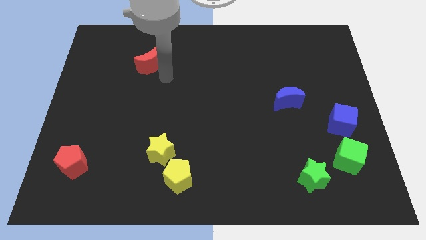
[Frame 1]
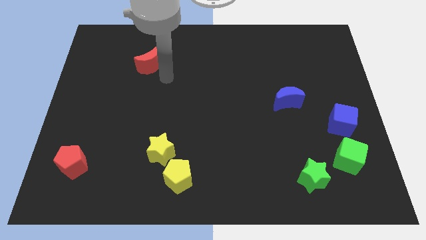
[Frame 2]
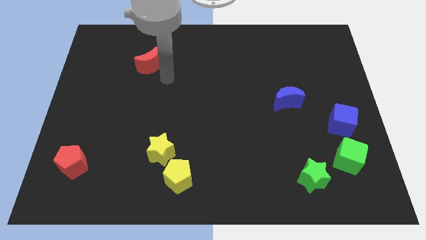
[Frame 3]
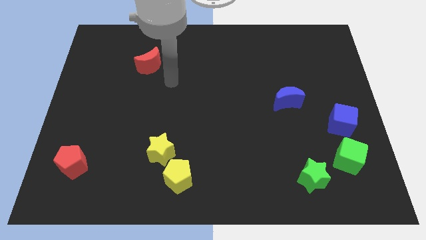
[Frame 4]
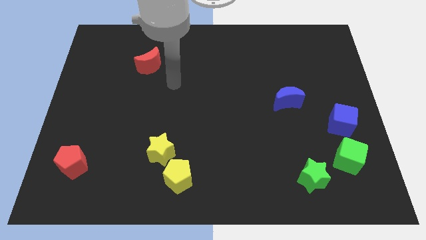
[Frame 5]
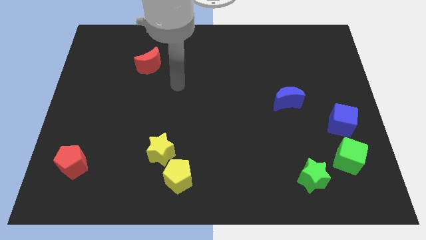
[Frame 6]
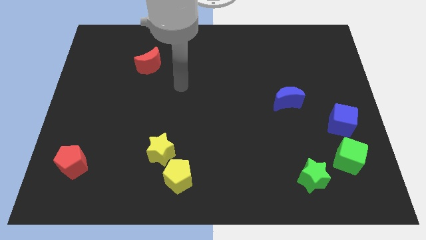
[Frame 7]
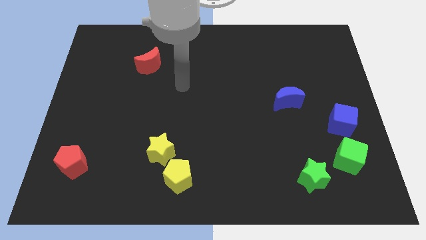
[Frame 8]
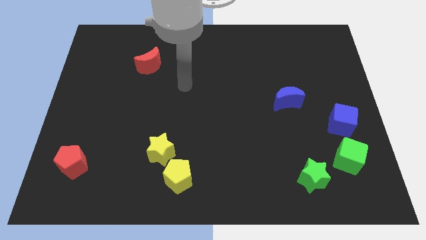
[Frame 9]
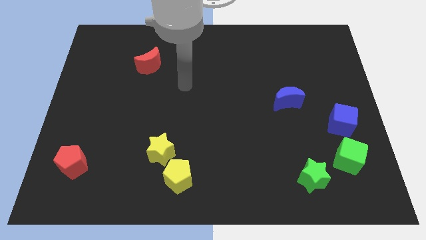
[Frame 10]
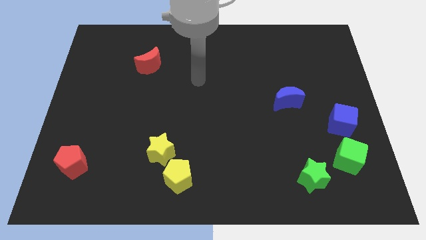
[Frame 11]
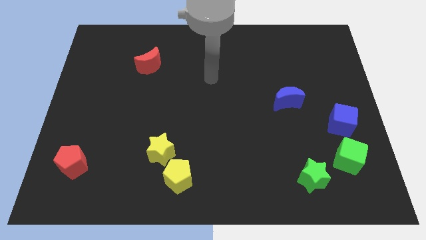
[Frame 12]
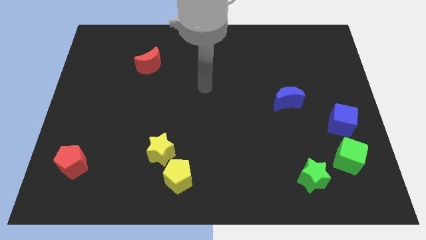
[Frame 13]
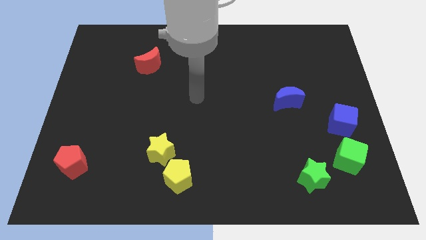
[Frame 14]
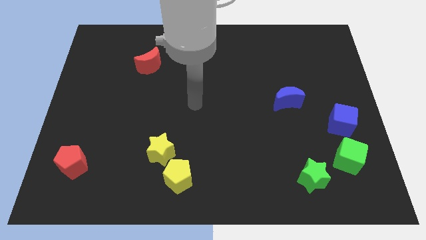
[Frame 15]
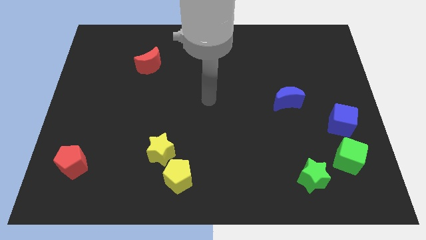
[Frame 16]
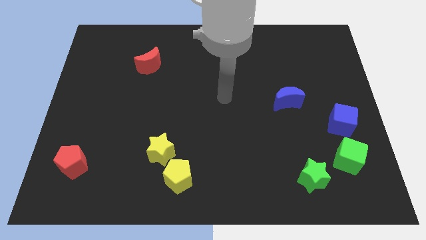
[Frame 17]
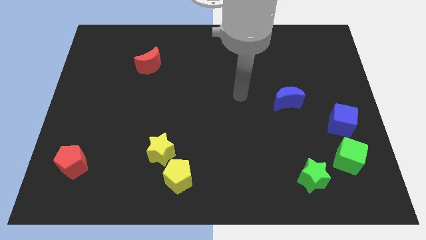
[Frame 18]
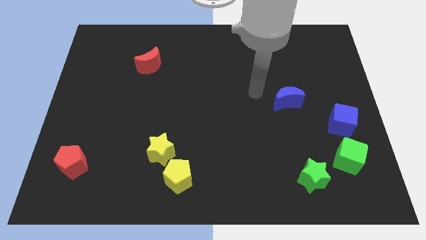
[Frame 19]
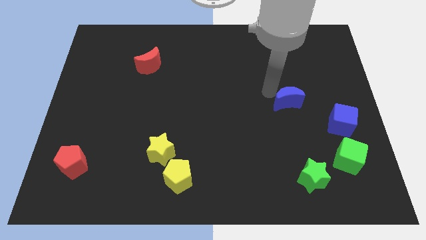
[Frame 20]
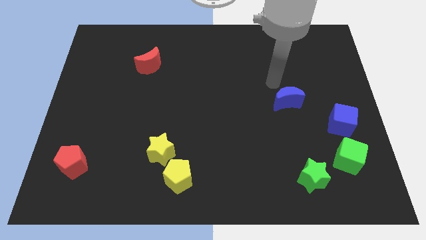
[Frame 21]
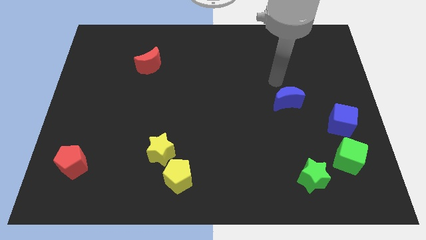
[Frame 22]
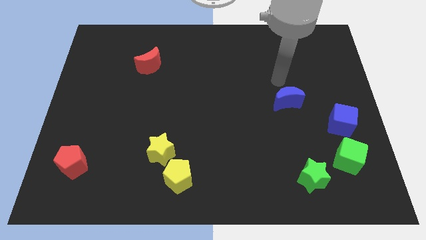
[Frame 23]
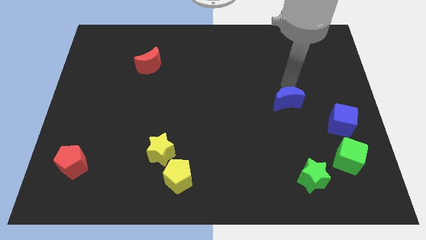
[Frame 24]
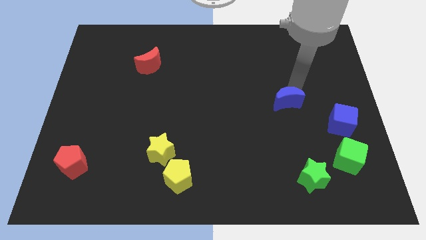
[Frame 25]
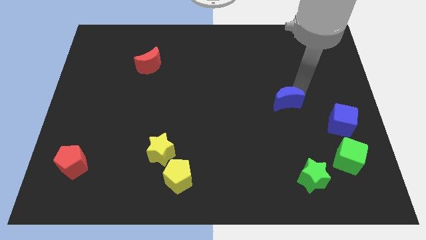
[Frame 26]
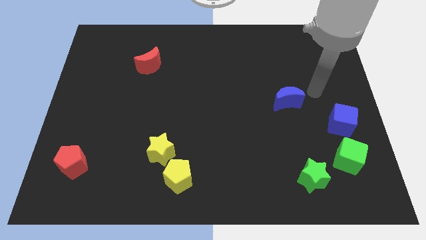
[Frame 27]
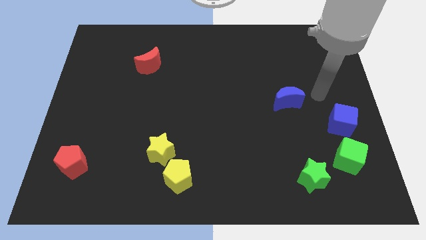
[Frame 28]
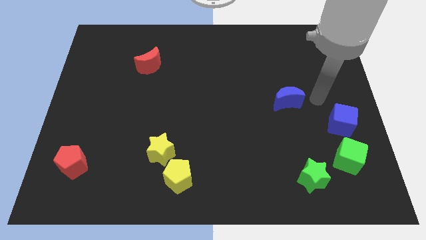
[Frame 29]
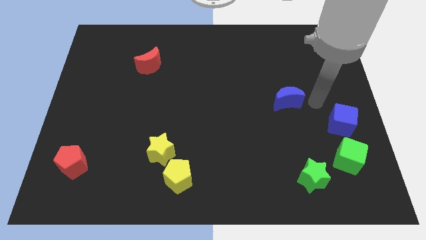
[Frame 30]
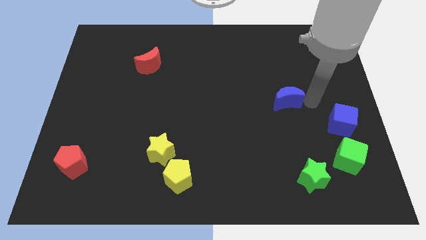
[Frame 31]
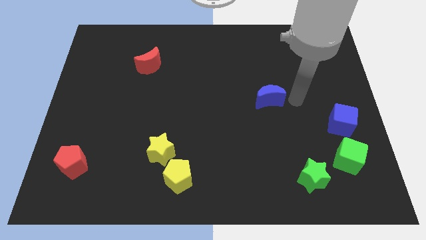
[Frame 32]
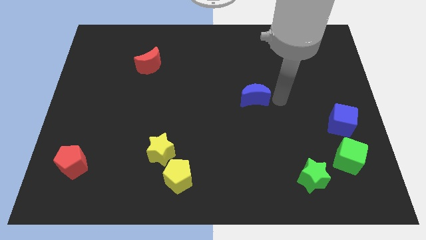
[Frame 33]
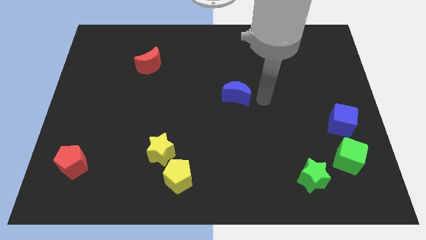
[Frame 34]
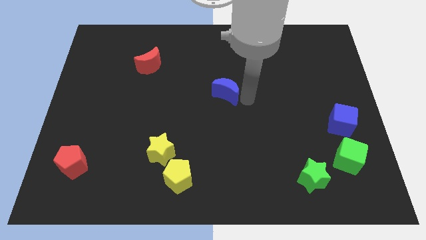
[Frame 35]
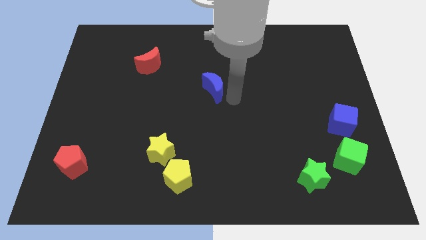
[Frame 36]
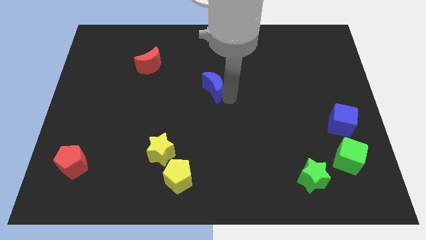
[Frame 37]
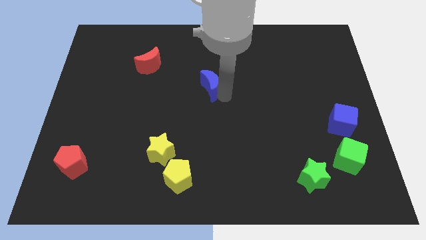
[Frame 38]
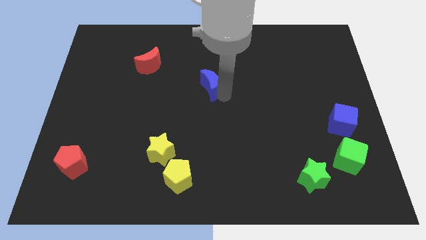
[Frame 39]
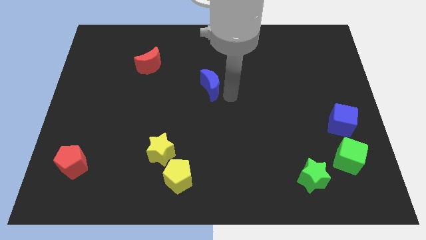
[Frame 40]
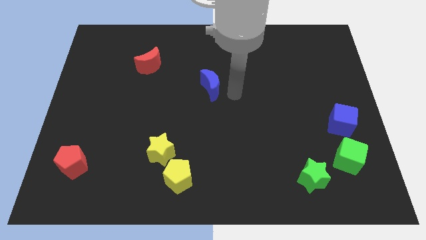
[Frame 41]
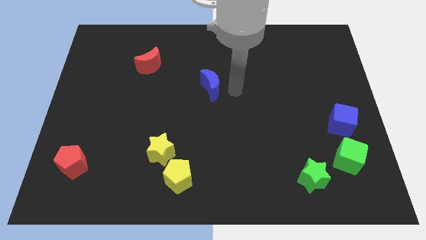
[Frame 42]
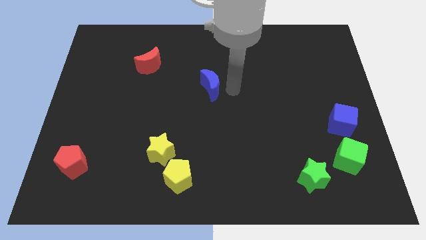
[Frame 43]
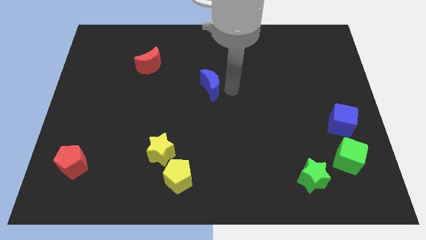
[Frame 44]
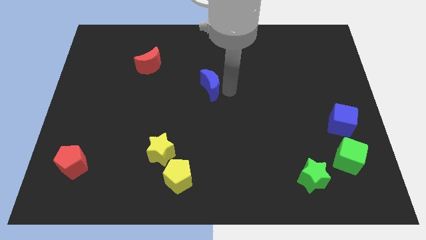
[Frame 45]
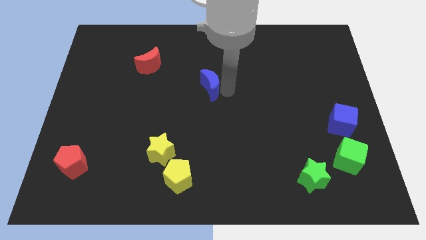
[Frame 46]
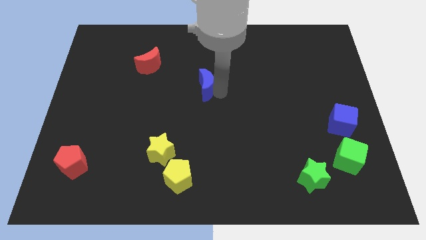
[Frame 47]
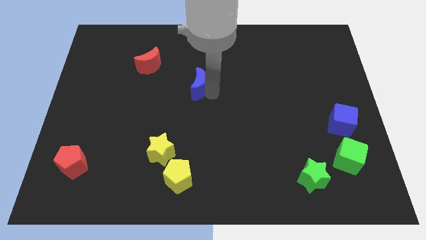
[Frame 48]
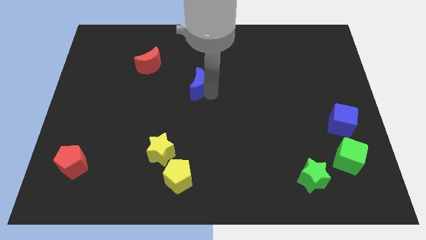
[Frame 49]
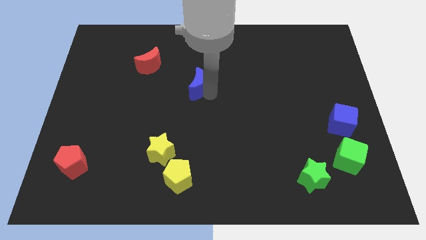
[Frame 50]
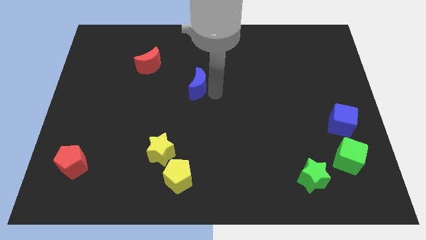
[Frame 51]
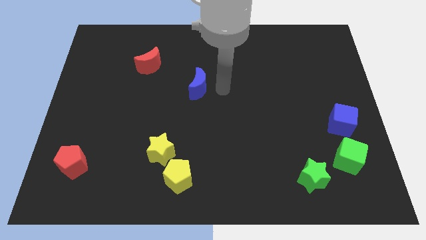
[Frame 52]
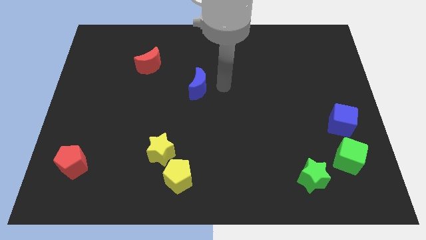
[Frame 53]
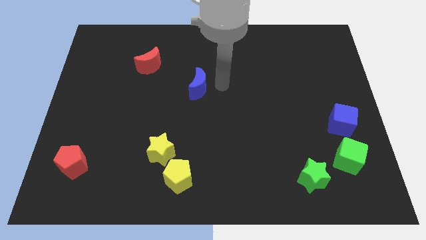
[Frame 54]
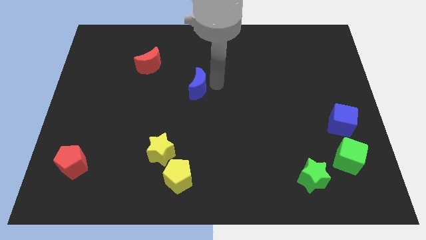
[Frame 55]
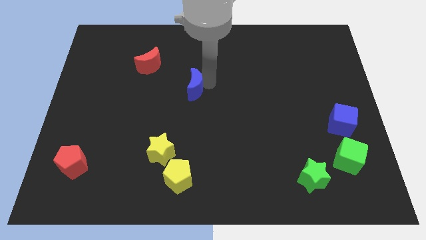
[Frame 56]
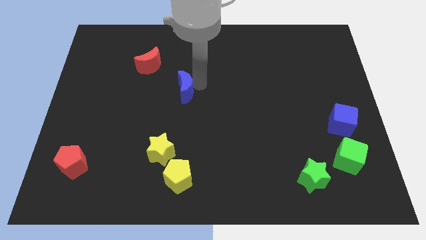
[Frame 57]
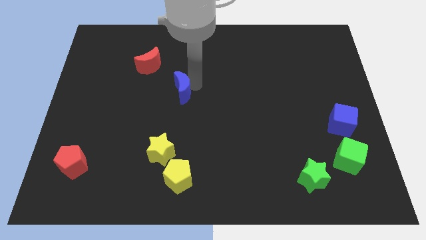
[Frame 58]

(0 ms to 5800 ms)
push the blue crescent to the left

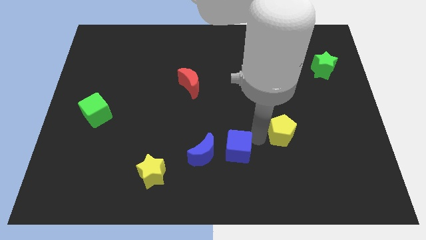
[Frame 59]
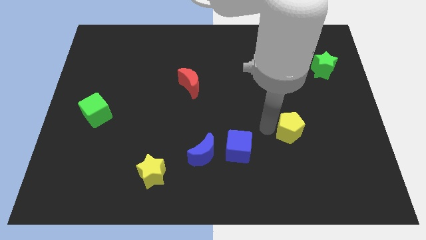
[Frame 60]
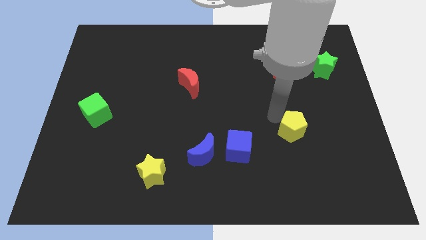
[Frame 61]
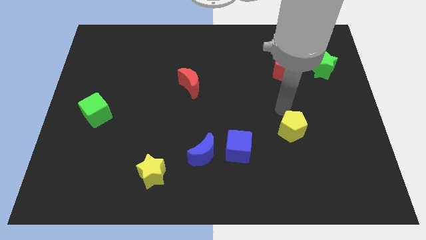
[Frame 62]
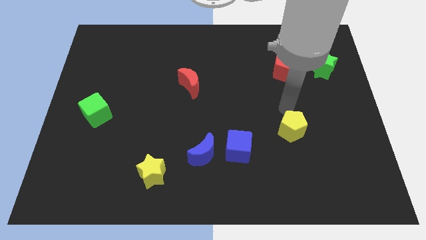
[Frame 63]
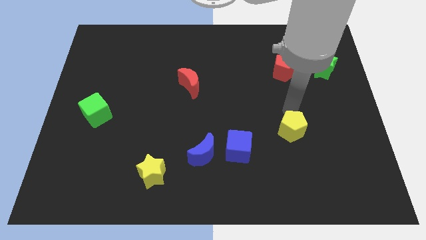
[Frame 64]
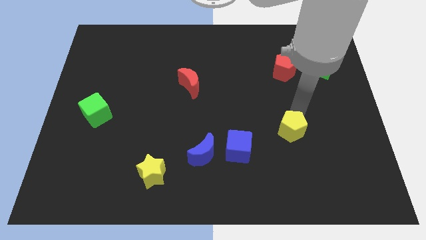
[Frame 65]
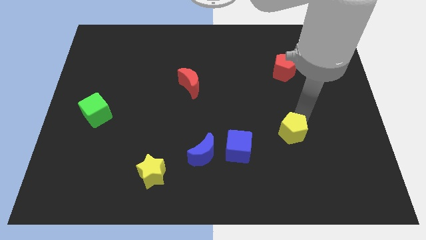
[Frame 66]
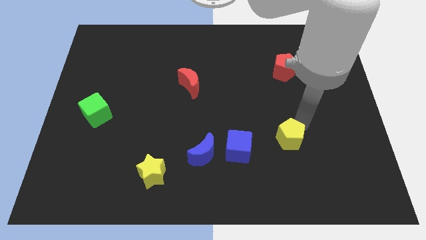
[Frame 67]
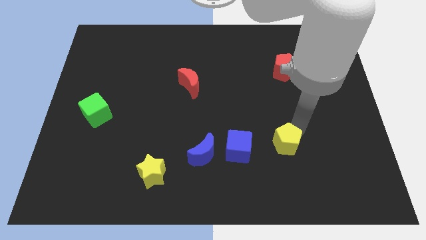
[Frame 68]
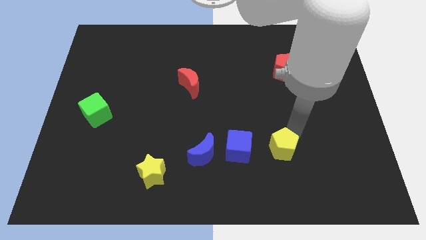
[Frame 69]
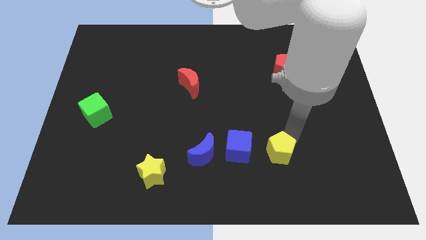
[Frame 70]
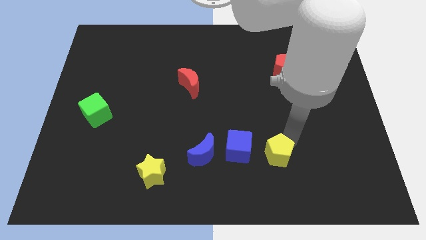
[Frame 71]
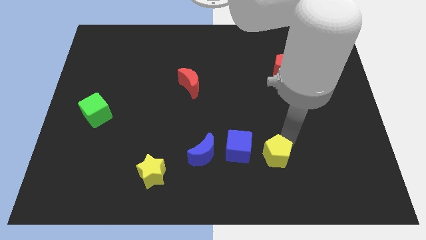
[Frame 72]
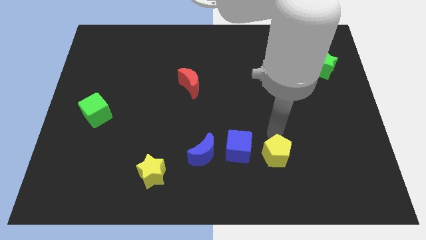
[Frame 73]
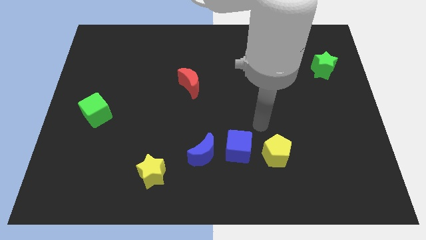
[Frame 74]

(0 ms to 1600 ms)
move the yellow pentagon right to the blue cube

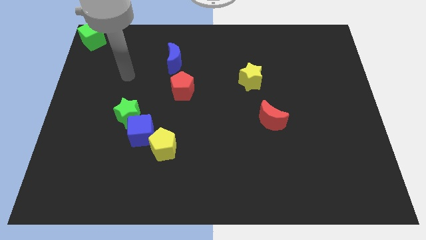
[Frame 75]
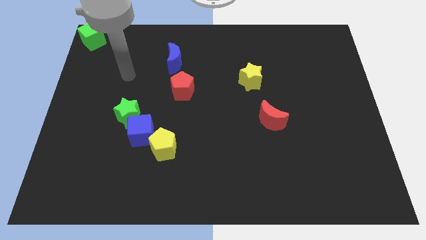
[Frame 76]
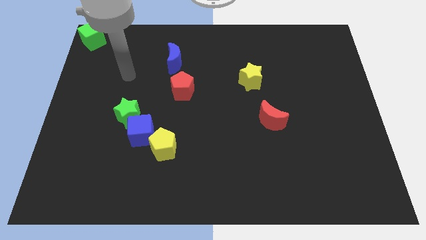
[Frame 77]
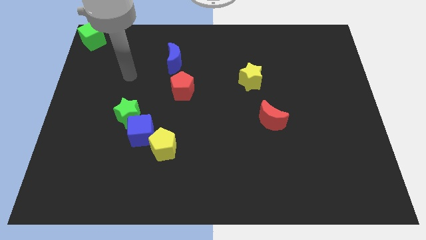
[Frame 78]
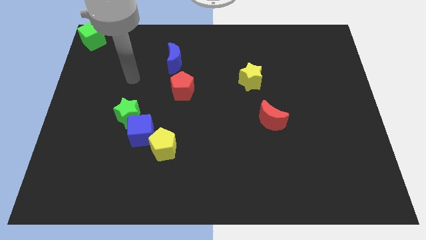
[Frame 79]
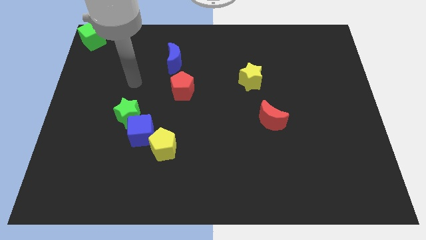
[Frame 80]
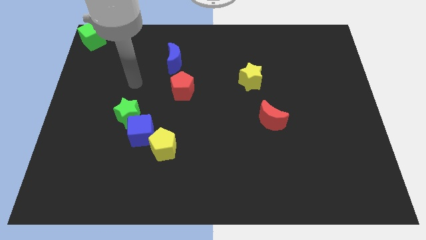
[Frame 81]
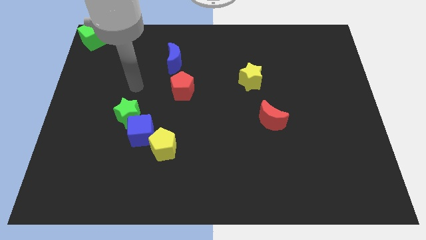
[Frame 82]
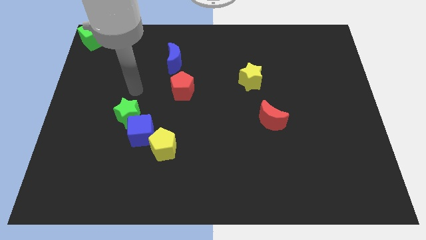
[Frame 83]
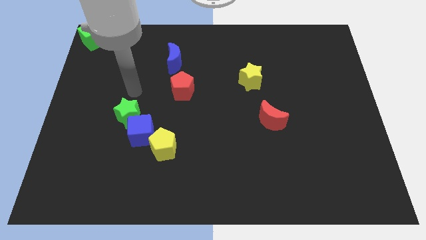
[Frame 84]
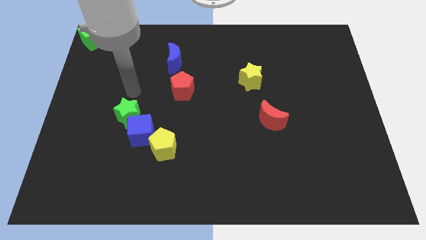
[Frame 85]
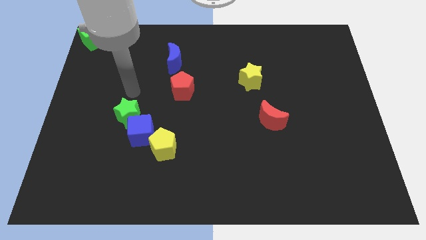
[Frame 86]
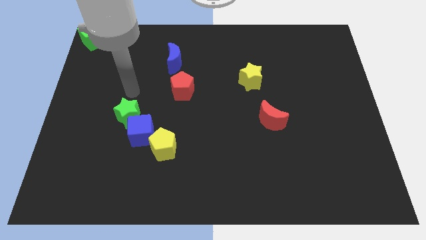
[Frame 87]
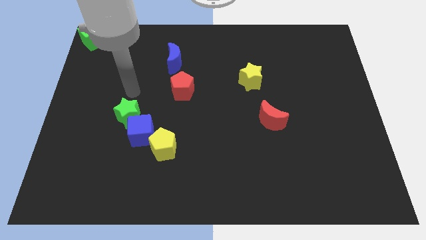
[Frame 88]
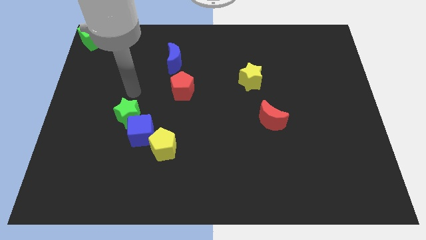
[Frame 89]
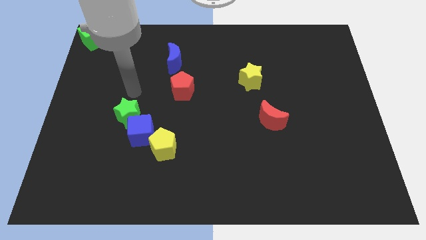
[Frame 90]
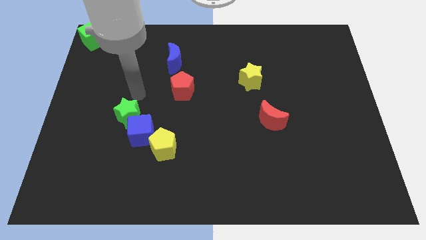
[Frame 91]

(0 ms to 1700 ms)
place arm on the top of green star
